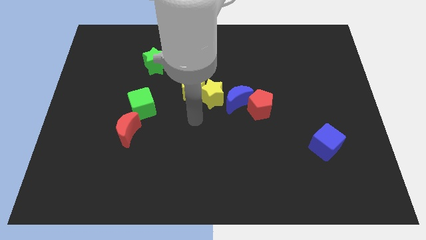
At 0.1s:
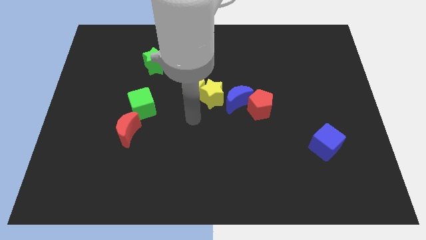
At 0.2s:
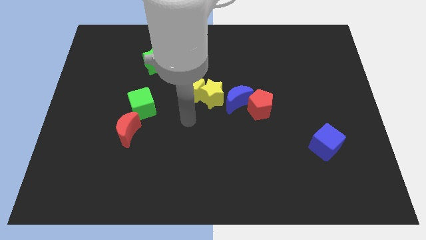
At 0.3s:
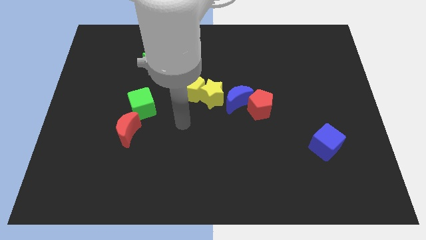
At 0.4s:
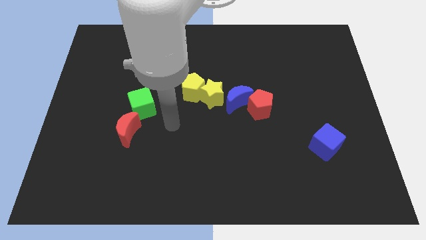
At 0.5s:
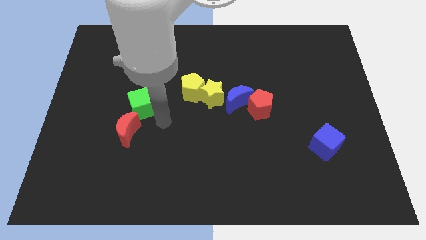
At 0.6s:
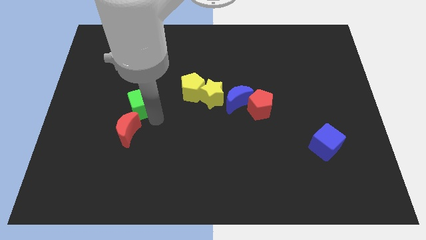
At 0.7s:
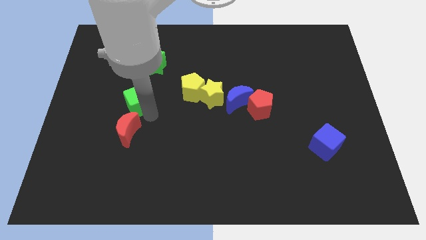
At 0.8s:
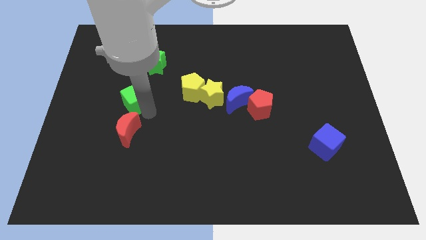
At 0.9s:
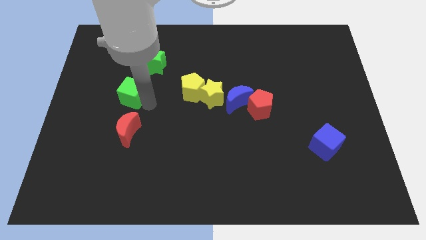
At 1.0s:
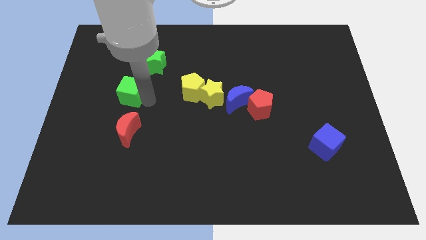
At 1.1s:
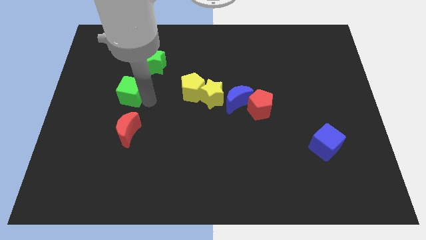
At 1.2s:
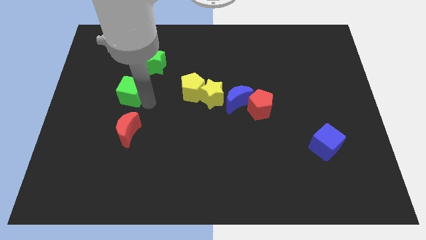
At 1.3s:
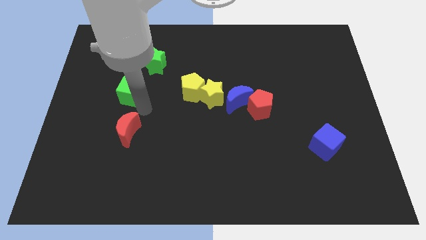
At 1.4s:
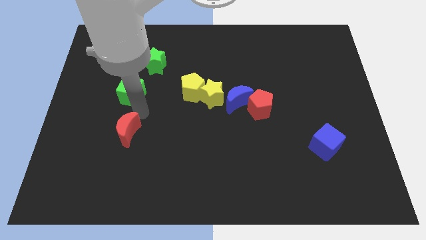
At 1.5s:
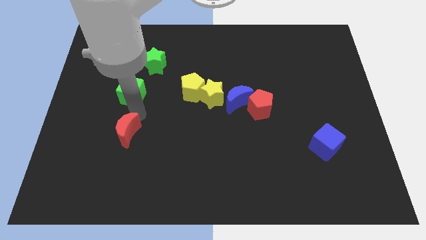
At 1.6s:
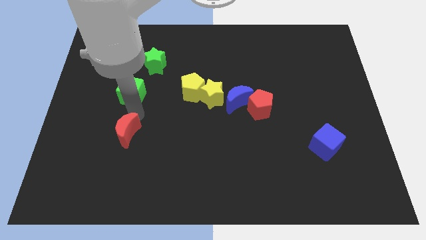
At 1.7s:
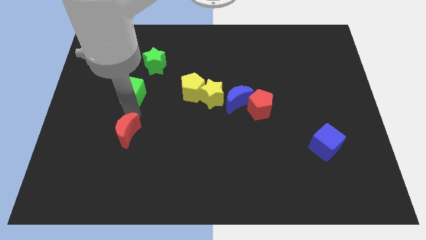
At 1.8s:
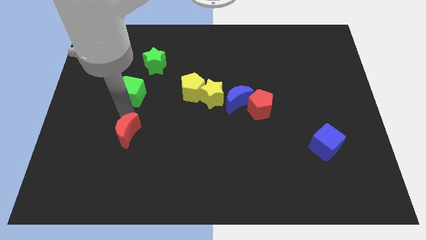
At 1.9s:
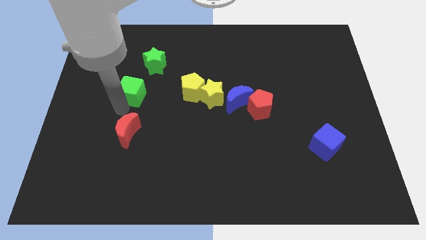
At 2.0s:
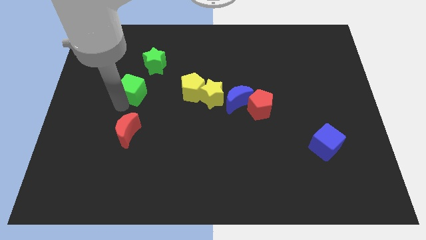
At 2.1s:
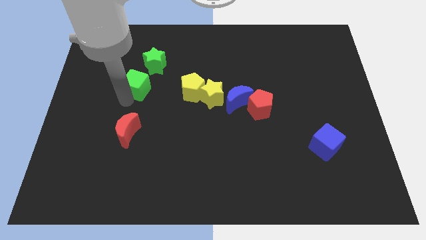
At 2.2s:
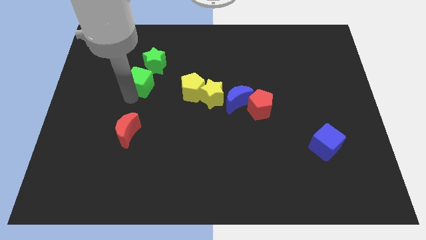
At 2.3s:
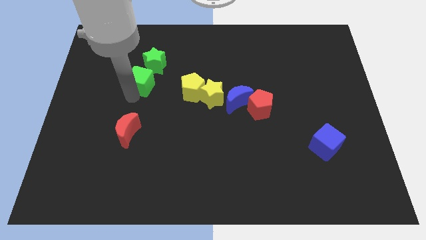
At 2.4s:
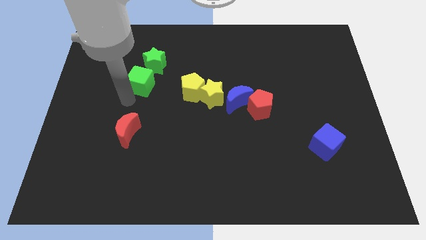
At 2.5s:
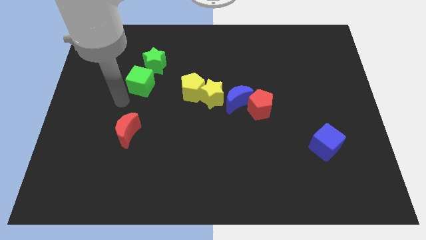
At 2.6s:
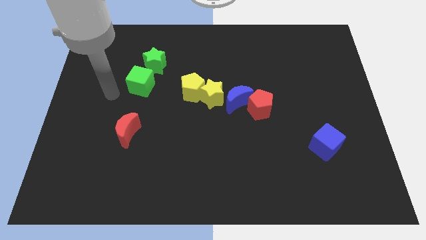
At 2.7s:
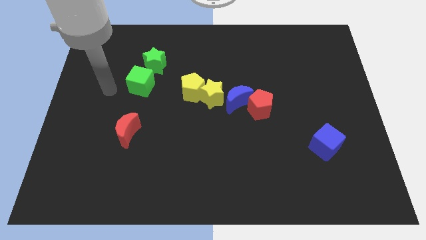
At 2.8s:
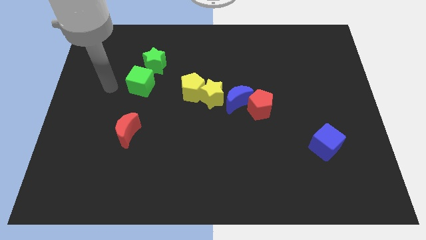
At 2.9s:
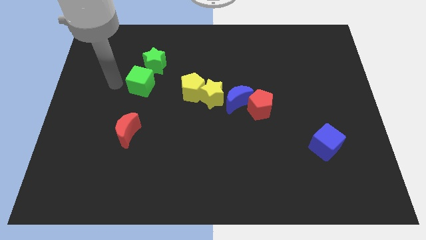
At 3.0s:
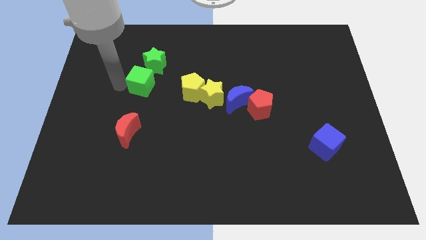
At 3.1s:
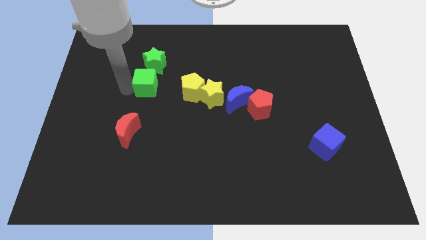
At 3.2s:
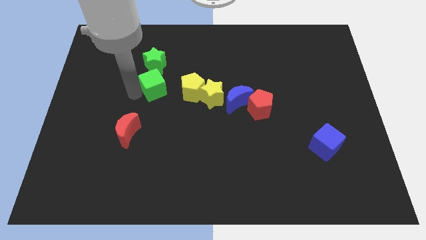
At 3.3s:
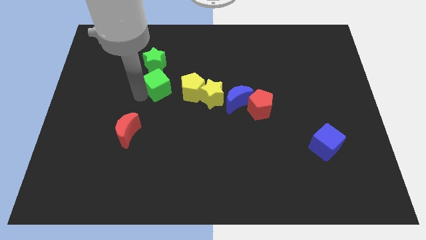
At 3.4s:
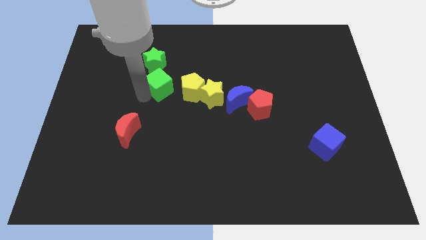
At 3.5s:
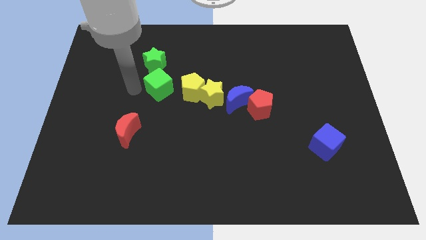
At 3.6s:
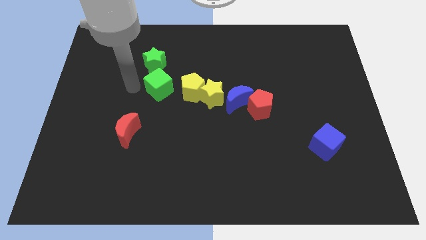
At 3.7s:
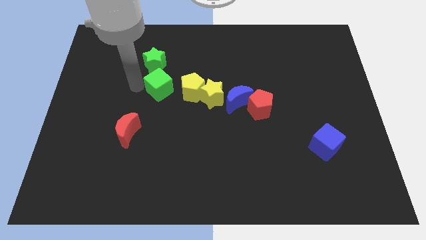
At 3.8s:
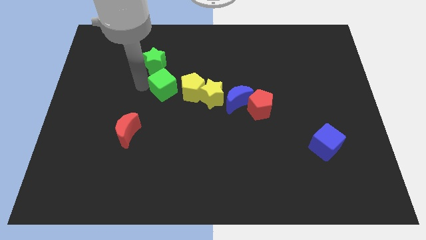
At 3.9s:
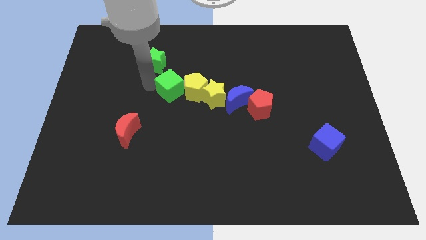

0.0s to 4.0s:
push the green cube into the left side of the yellow pentagon

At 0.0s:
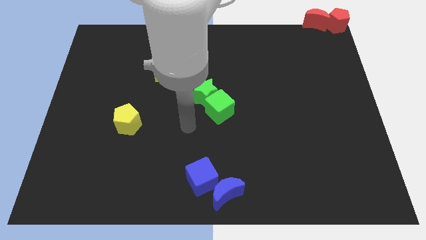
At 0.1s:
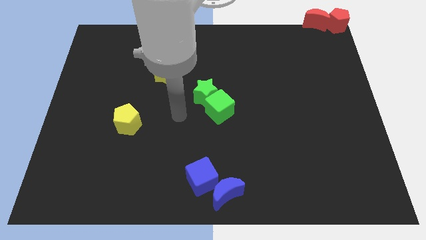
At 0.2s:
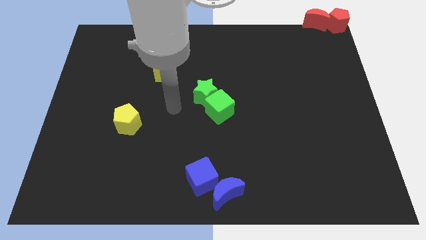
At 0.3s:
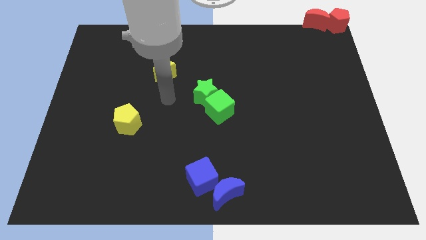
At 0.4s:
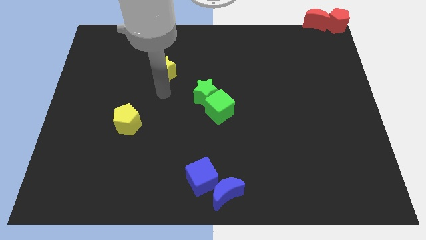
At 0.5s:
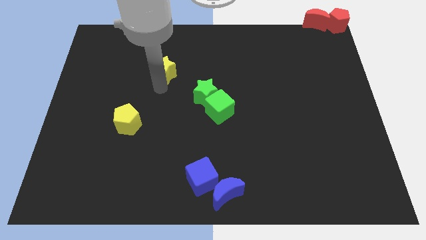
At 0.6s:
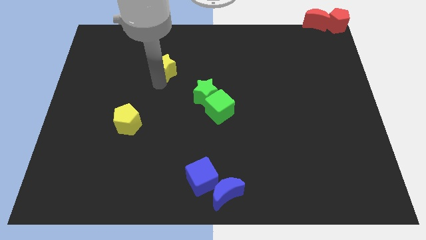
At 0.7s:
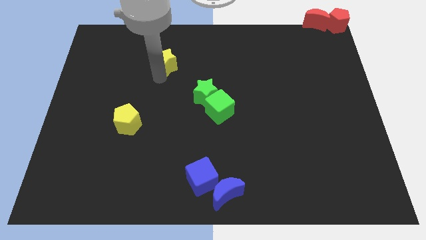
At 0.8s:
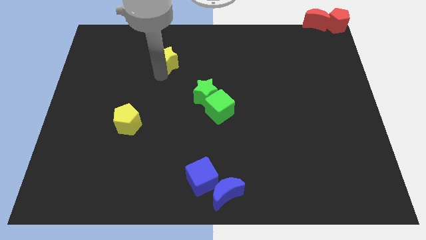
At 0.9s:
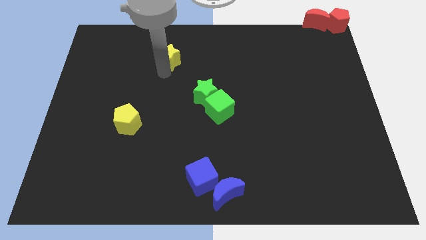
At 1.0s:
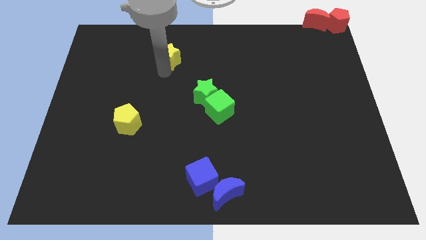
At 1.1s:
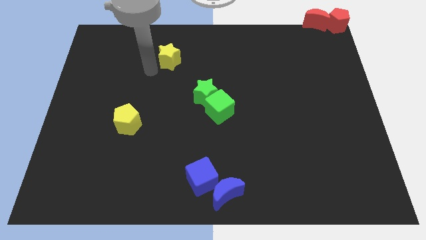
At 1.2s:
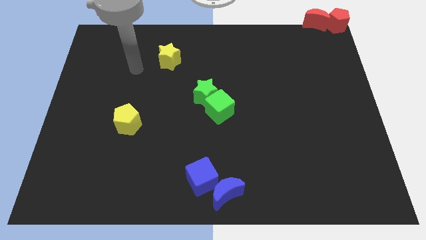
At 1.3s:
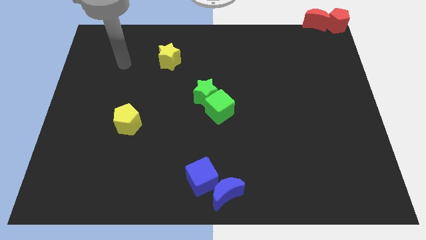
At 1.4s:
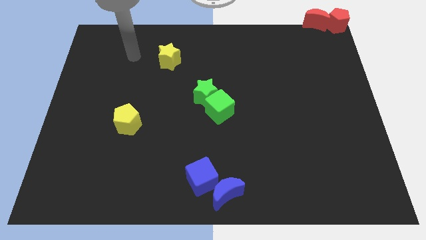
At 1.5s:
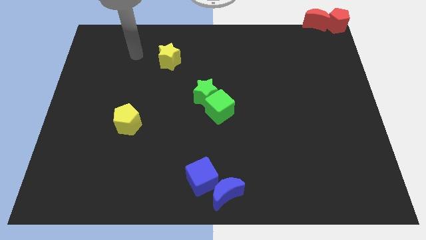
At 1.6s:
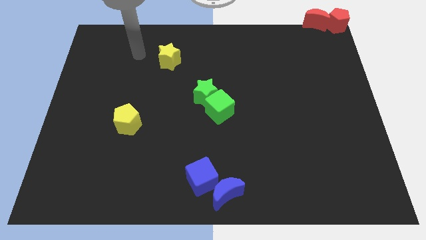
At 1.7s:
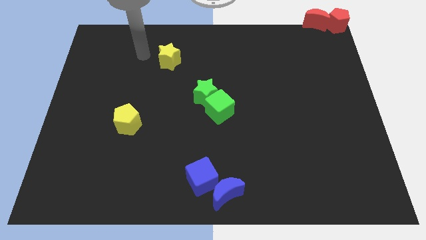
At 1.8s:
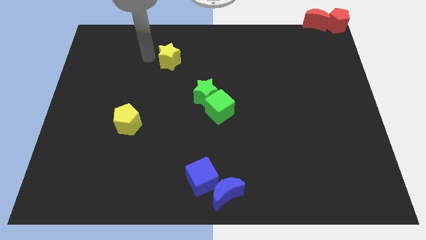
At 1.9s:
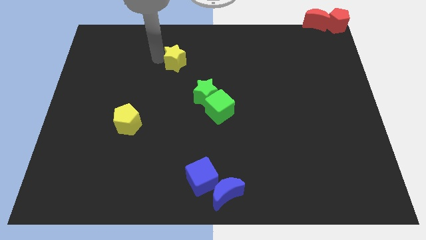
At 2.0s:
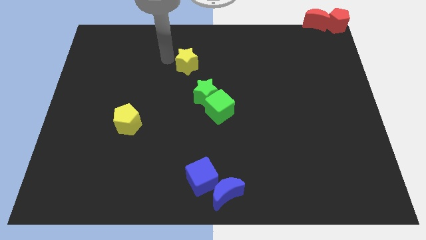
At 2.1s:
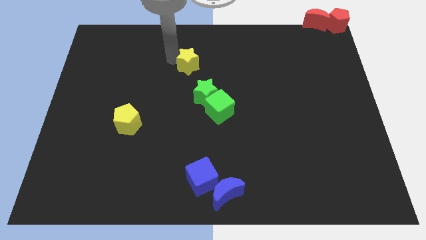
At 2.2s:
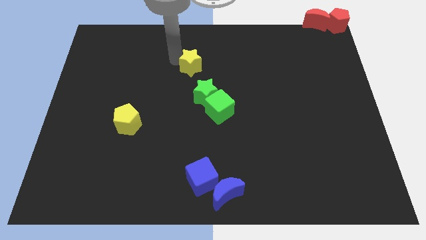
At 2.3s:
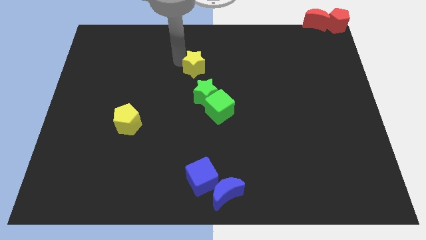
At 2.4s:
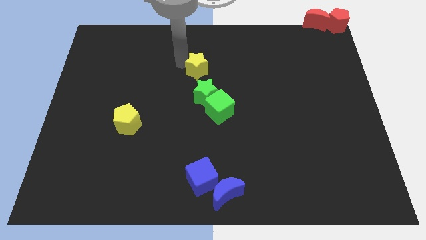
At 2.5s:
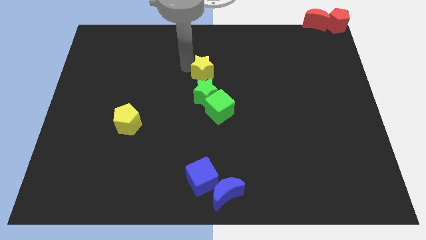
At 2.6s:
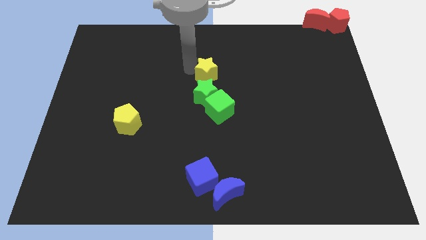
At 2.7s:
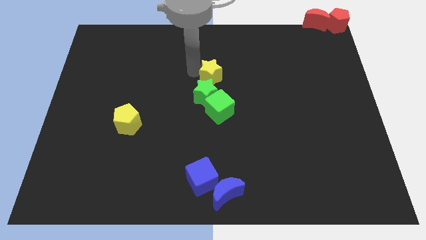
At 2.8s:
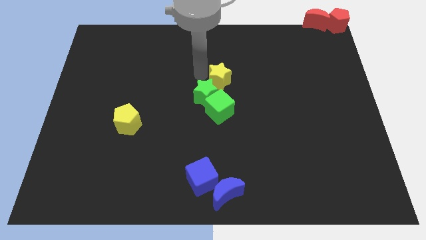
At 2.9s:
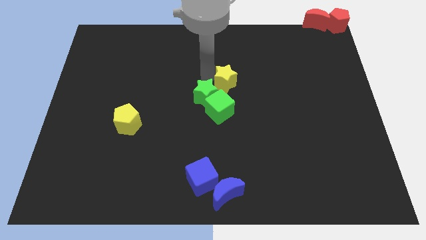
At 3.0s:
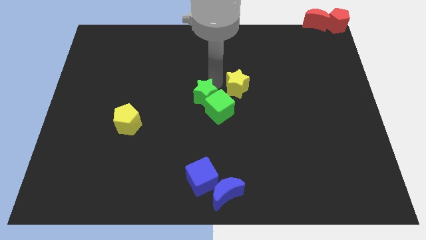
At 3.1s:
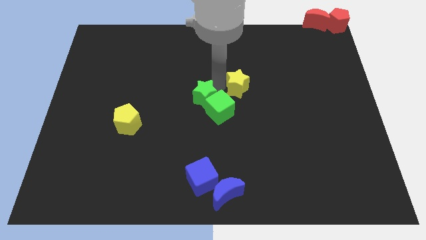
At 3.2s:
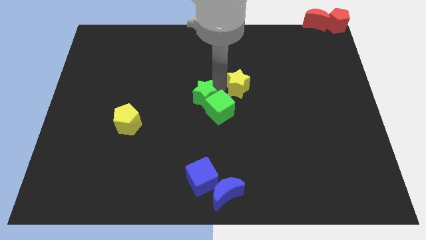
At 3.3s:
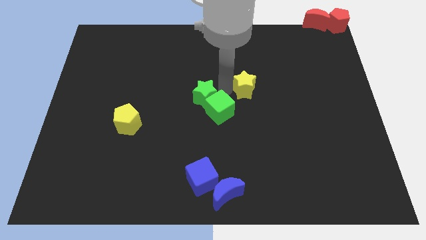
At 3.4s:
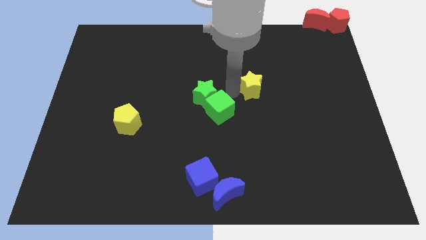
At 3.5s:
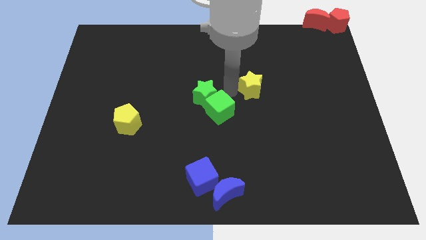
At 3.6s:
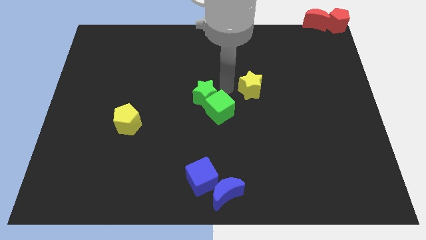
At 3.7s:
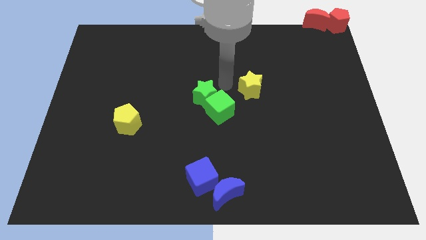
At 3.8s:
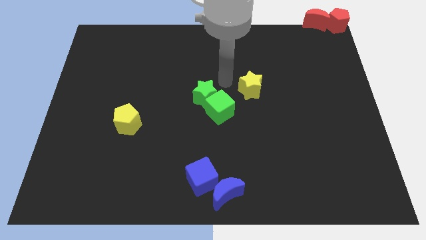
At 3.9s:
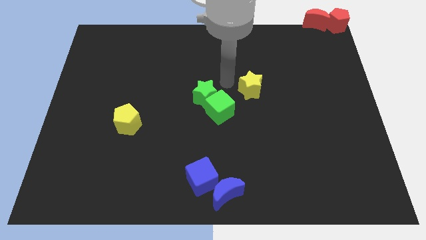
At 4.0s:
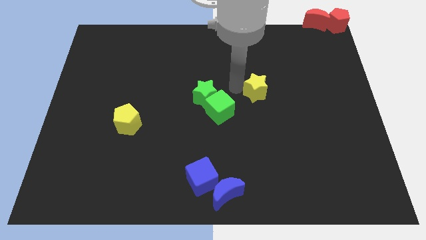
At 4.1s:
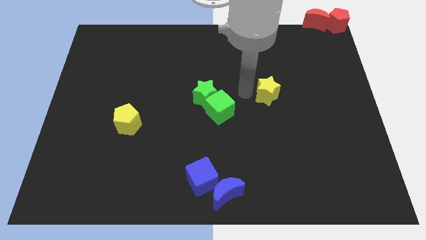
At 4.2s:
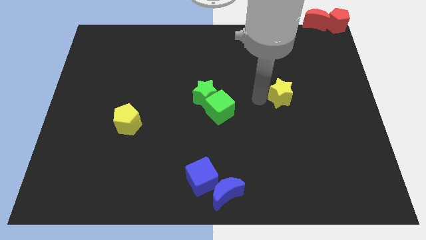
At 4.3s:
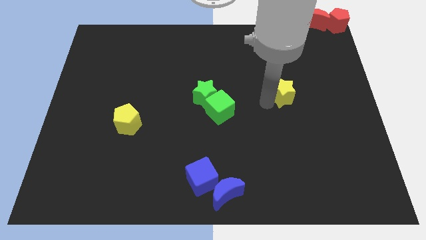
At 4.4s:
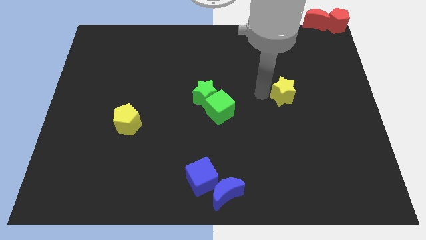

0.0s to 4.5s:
push the yellow star horizontally to the right side of the green star

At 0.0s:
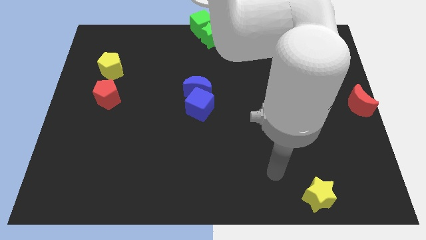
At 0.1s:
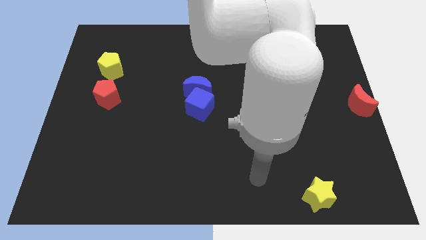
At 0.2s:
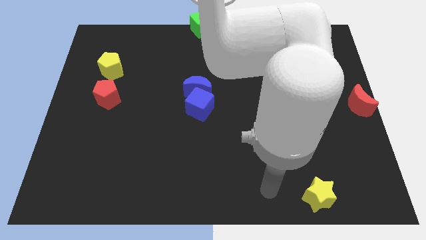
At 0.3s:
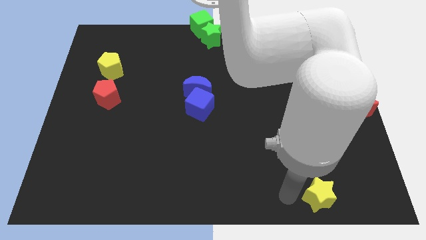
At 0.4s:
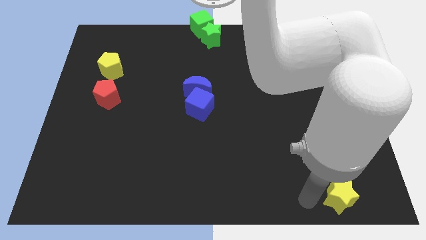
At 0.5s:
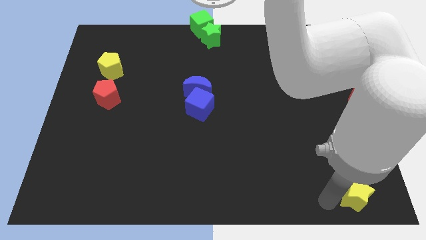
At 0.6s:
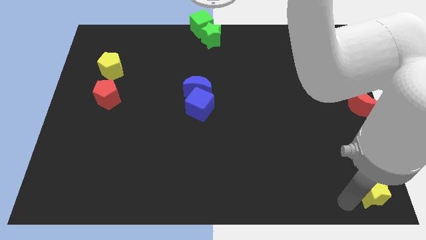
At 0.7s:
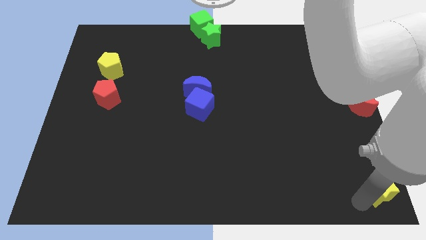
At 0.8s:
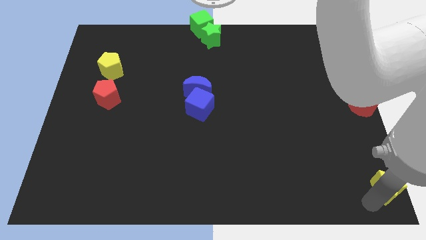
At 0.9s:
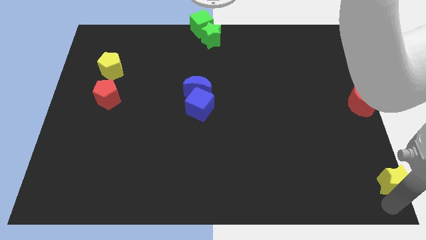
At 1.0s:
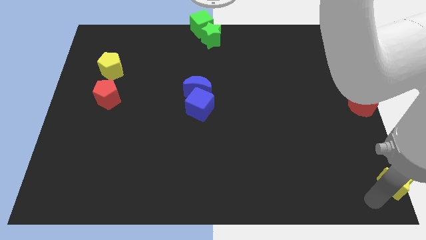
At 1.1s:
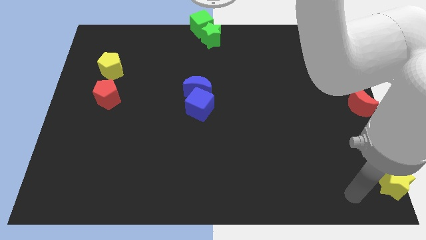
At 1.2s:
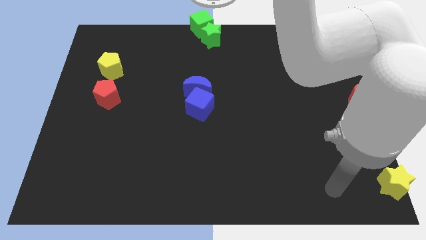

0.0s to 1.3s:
place the yellow star at the bottom right of the board
